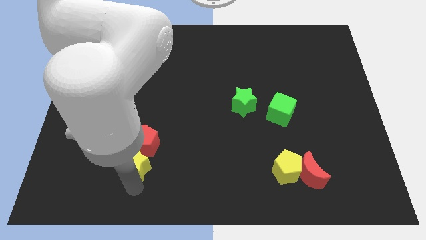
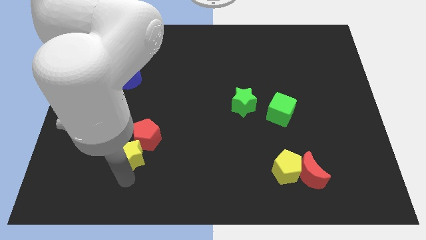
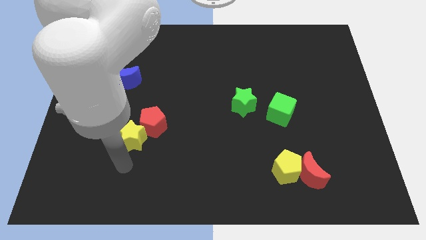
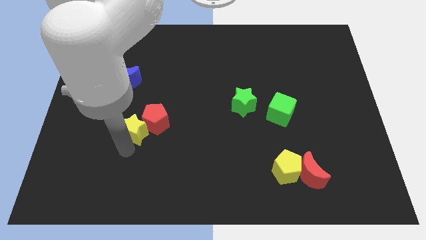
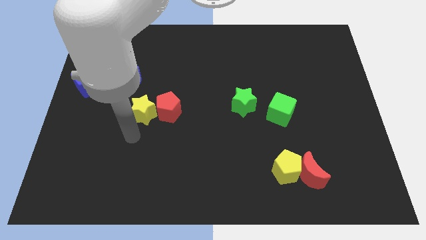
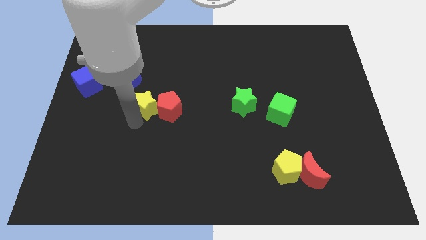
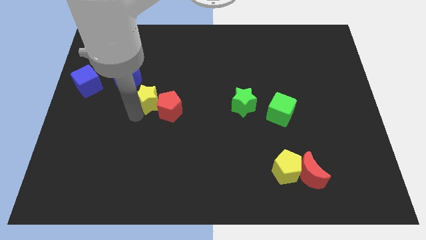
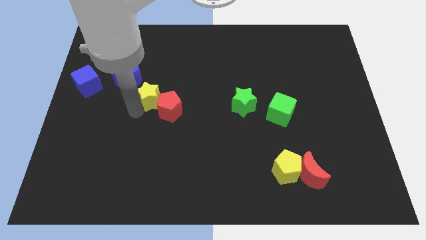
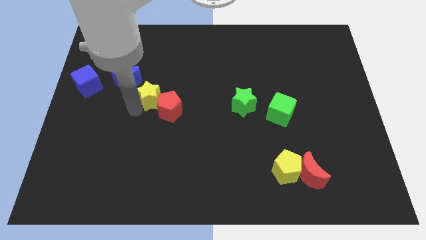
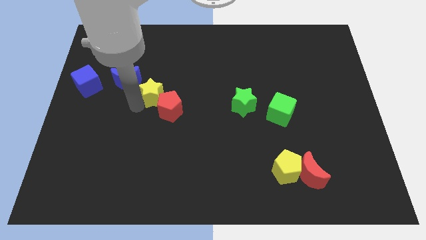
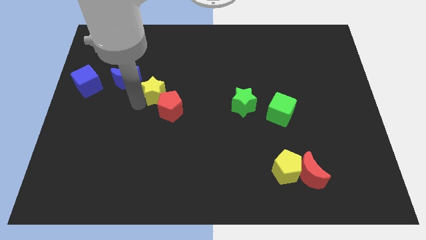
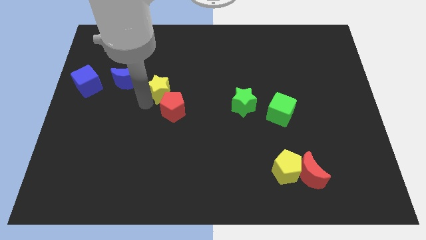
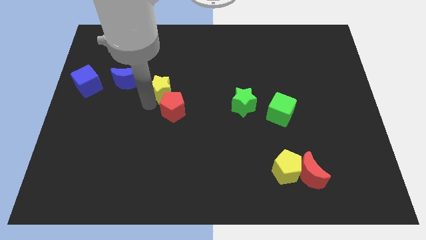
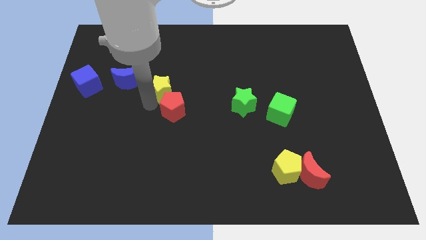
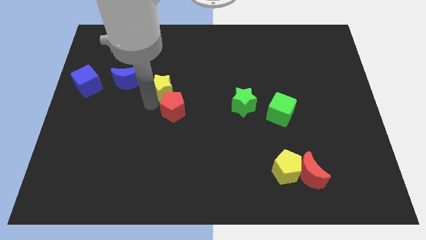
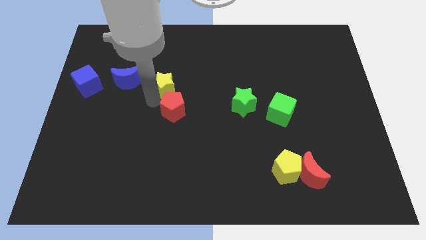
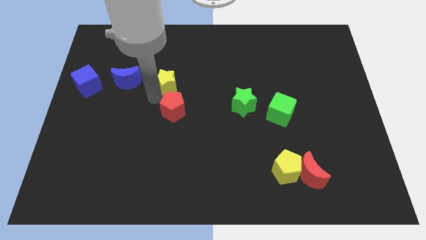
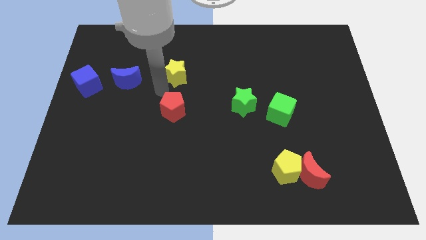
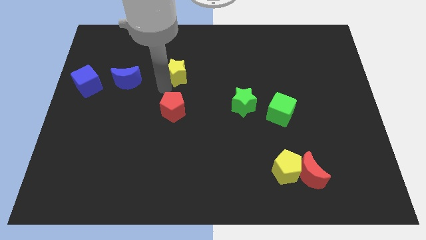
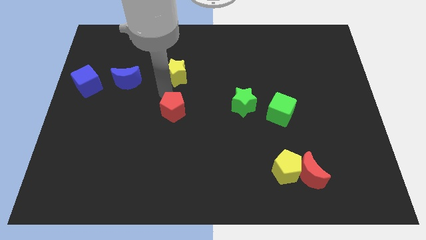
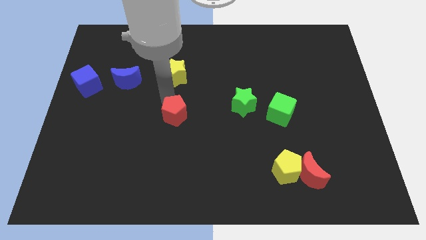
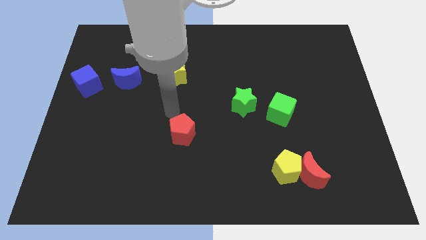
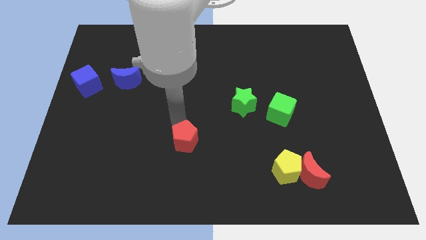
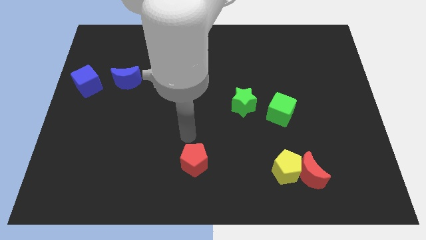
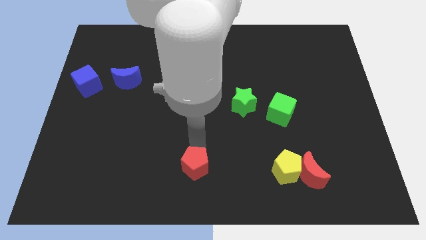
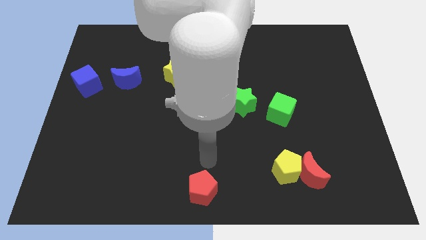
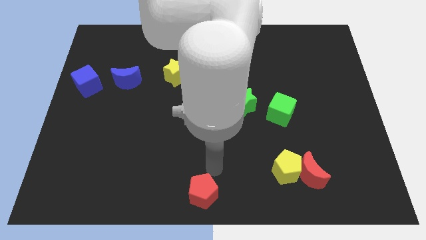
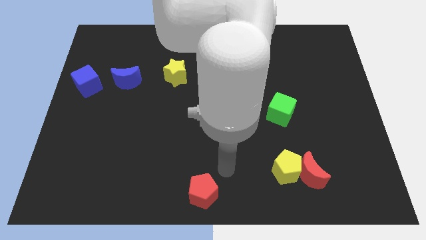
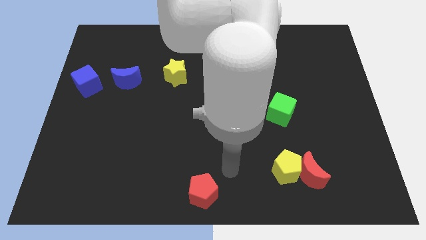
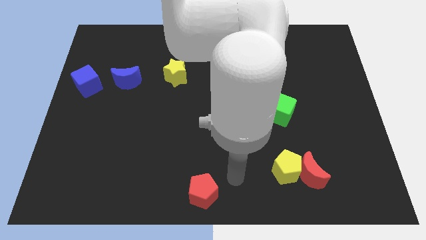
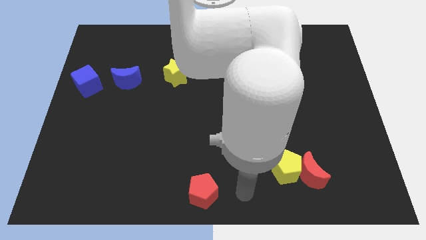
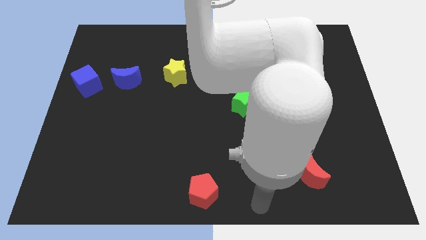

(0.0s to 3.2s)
slide the red pentagon to the bottom center of the board

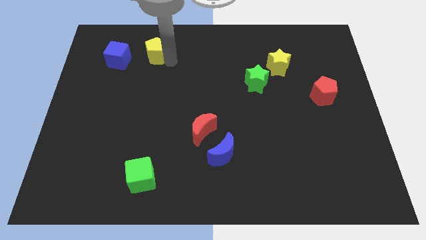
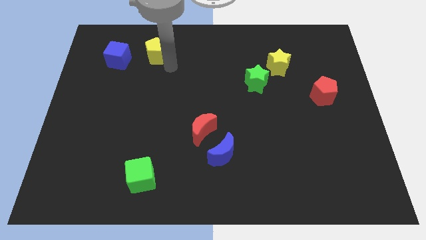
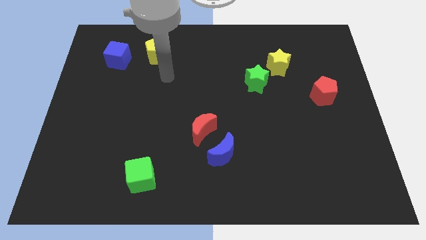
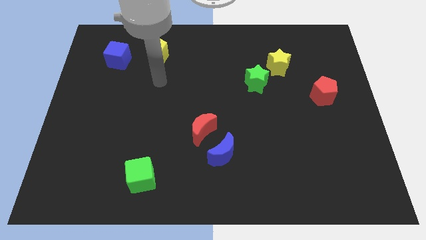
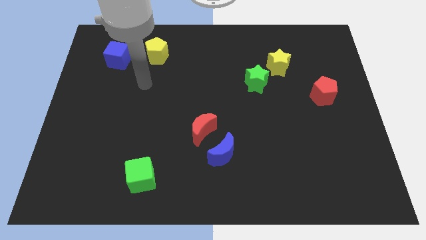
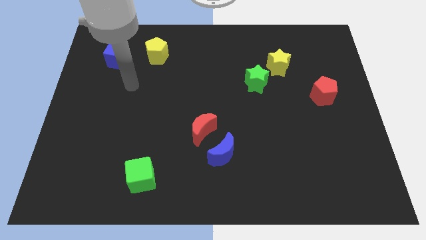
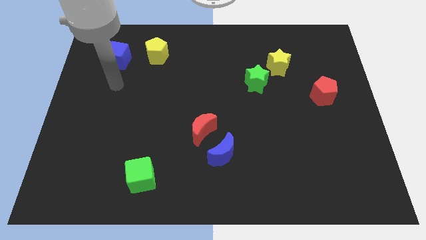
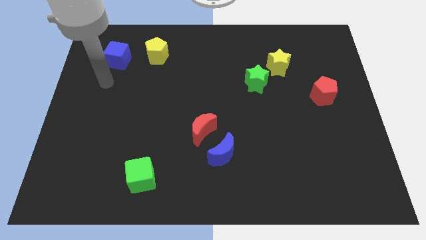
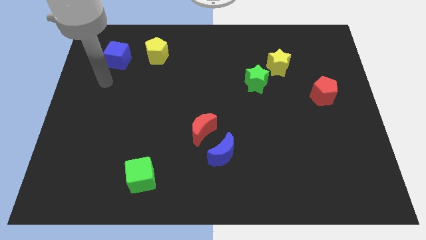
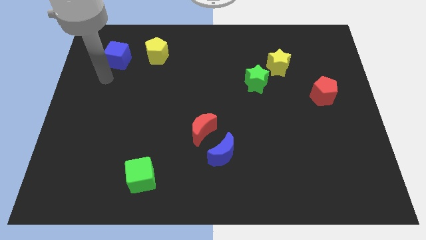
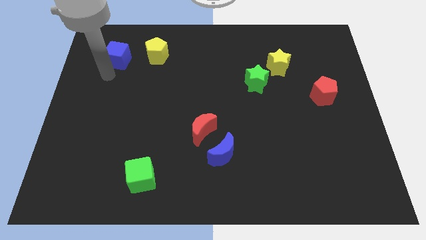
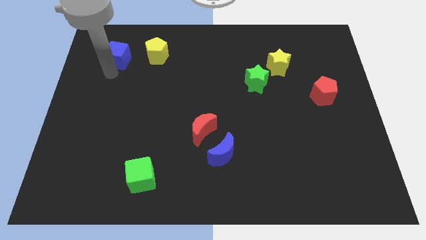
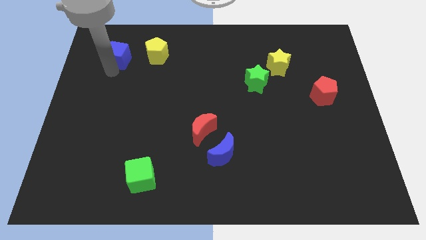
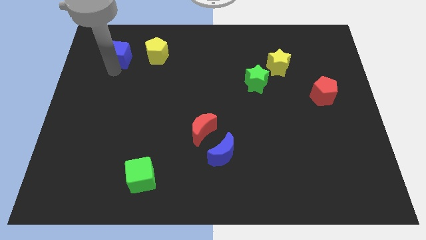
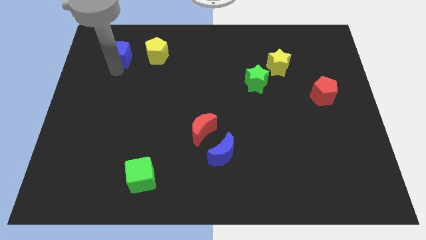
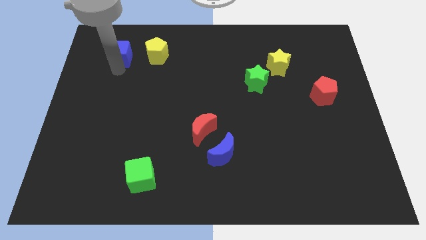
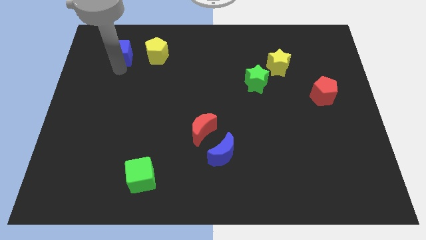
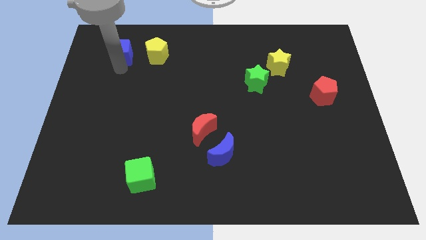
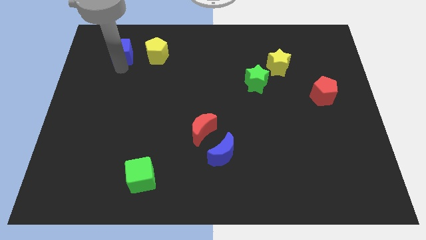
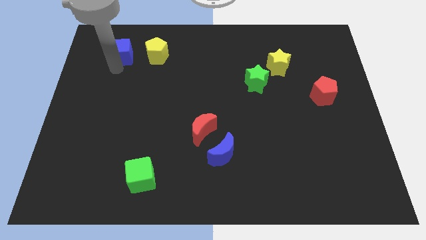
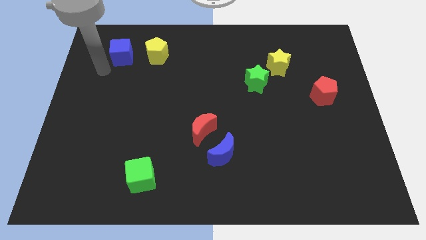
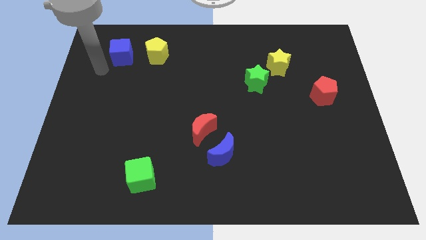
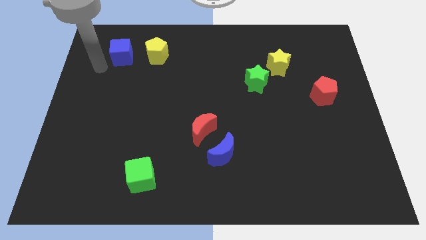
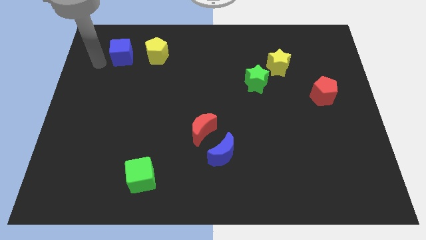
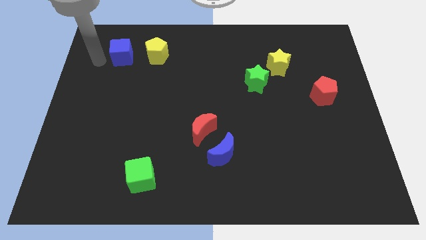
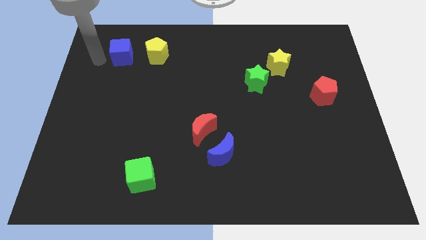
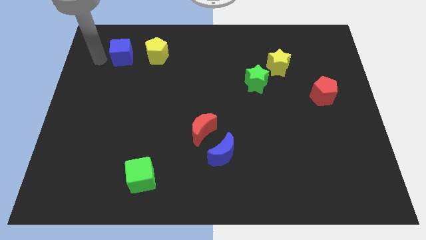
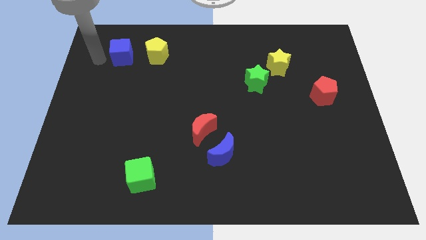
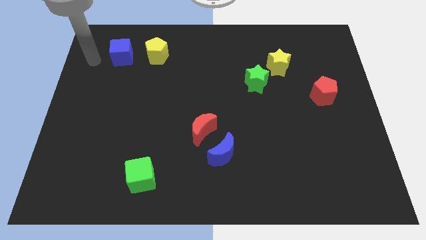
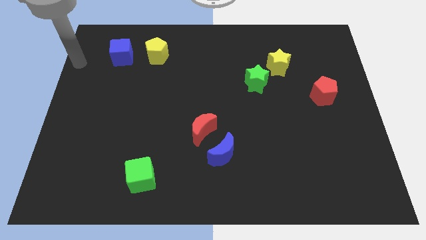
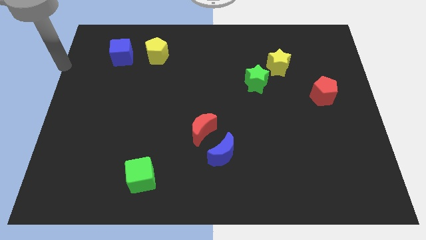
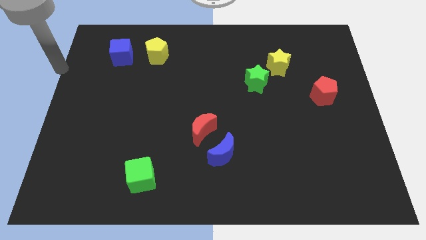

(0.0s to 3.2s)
slightly push the blue cube towards the yellow pentagon

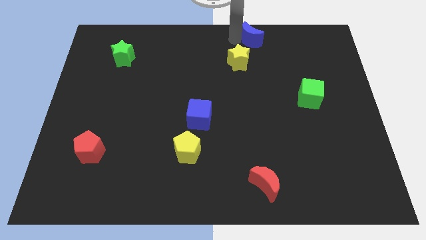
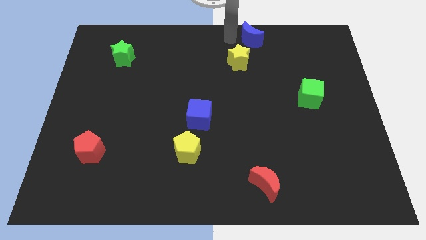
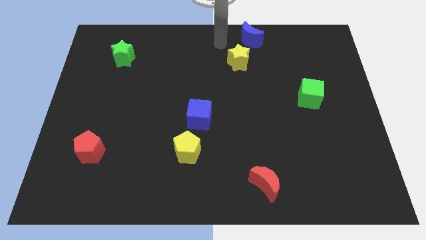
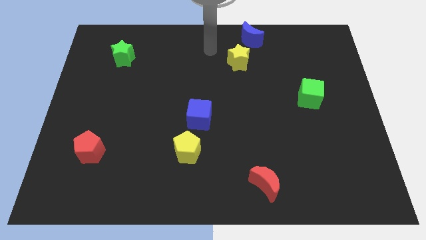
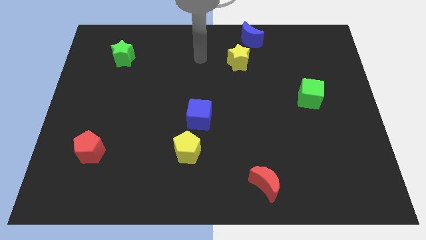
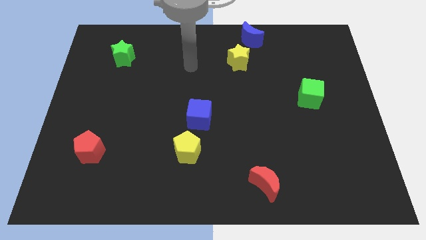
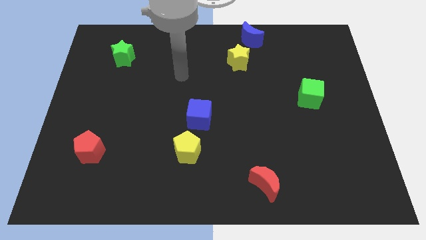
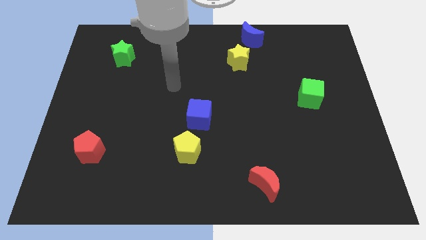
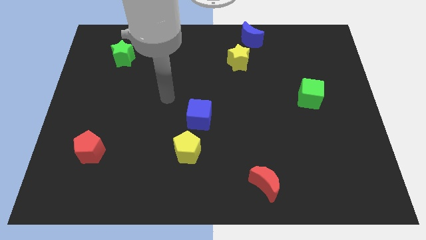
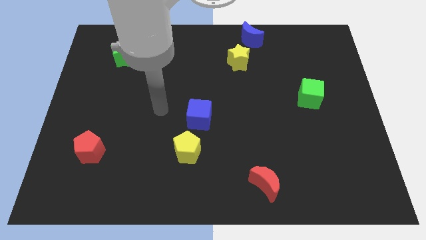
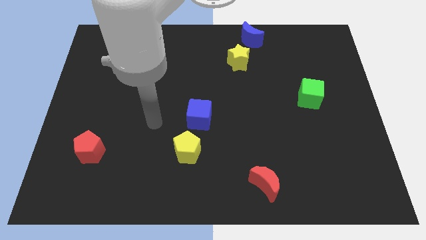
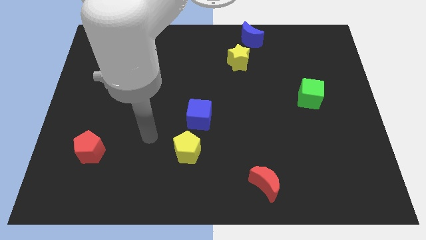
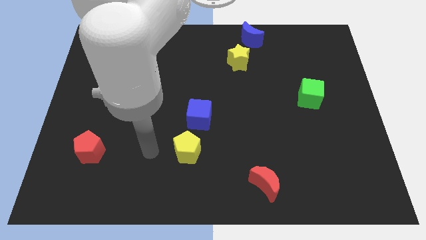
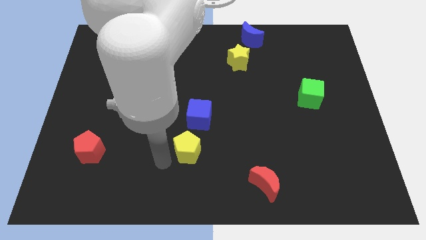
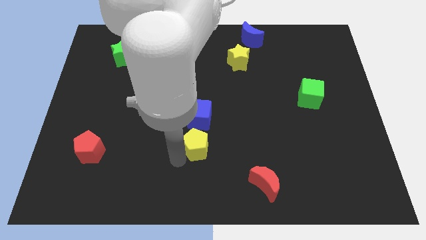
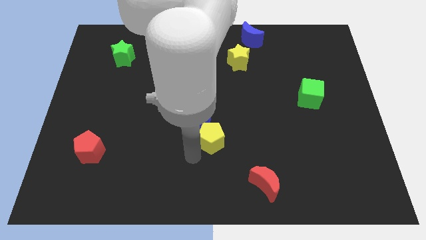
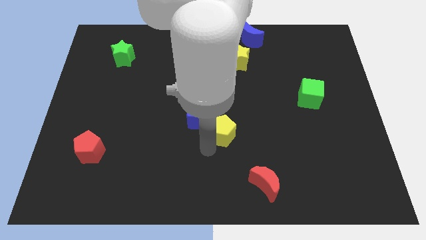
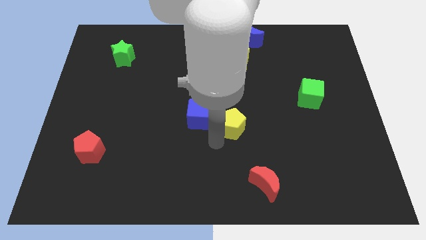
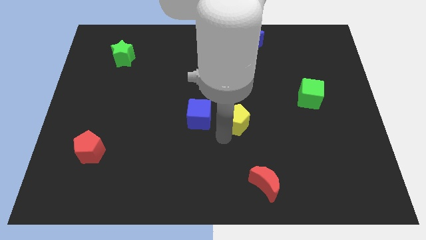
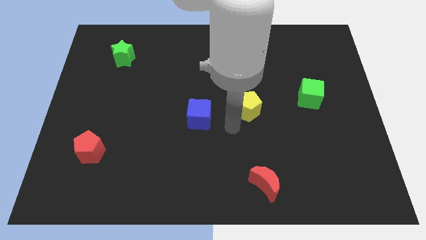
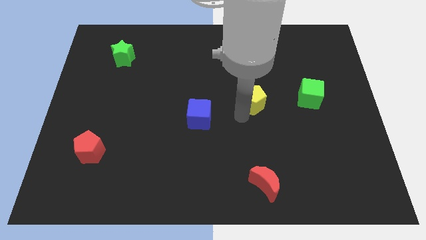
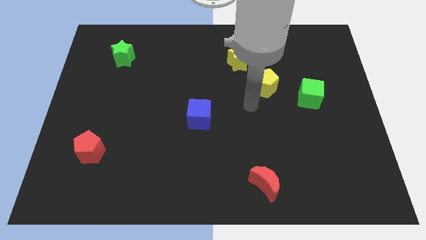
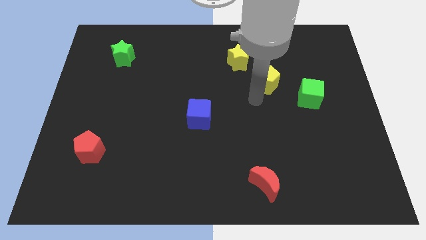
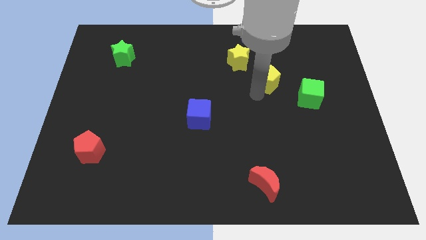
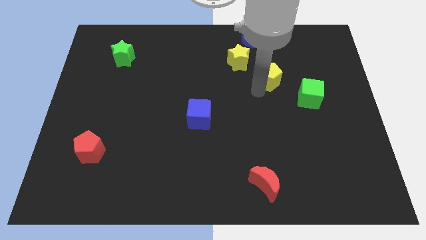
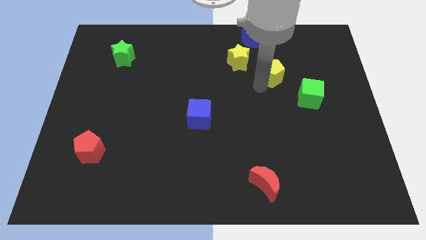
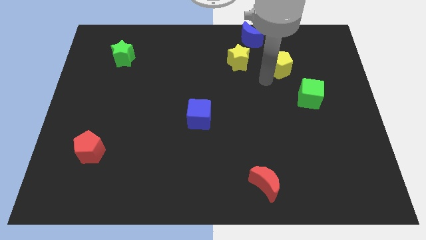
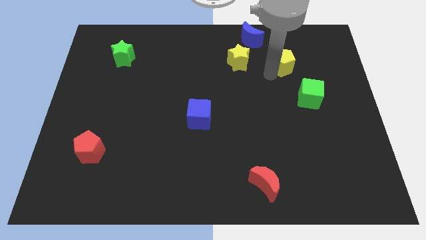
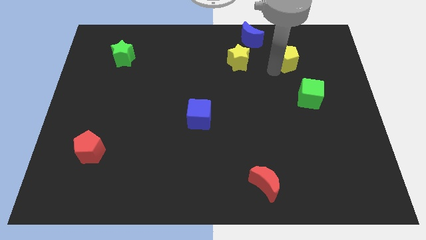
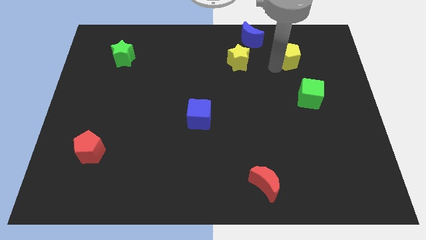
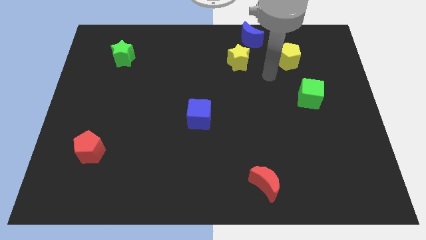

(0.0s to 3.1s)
place the yellow pentagon horizontally at the right side of the yellow star
